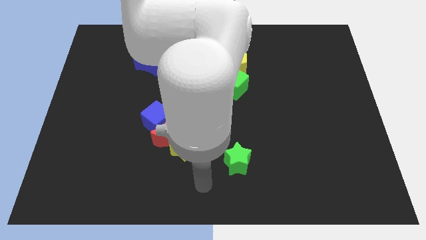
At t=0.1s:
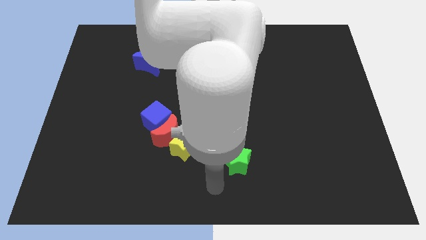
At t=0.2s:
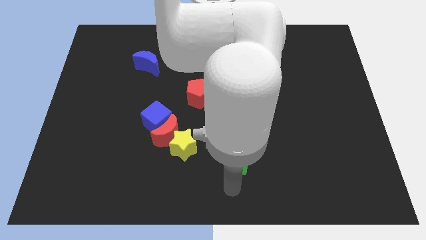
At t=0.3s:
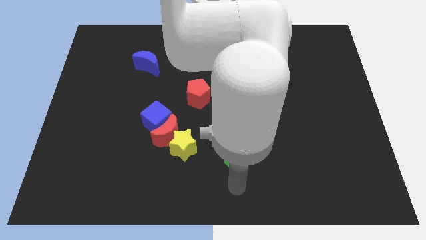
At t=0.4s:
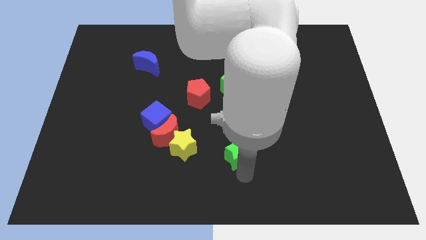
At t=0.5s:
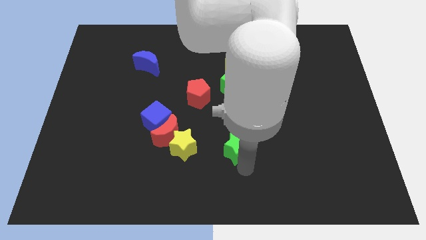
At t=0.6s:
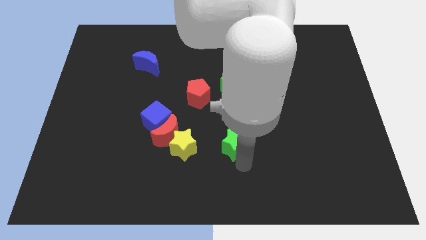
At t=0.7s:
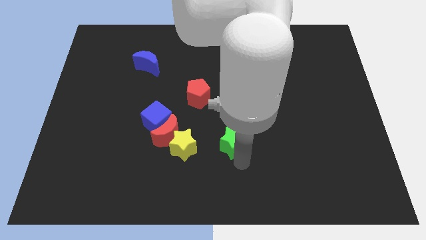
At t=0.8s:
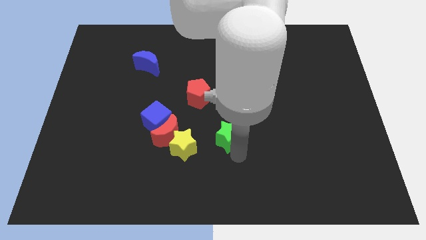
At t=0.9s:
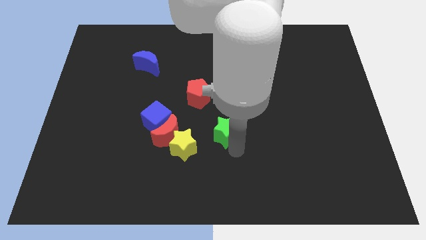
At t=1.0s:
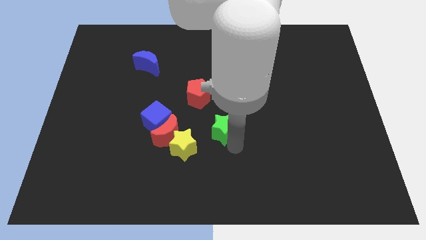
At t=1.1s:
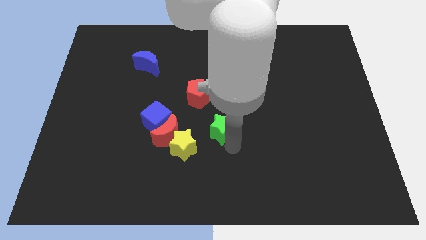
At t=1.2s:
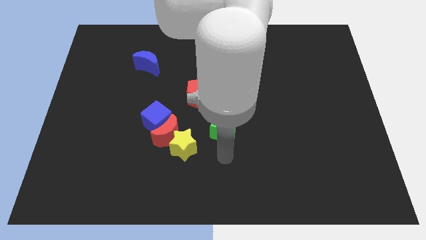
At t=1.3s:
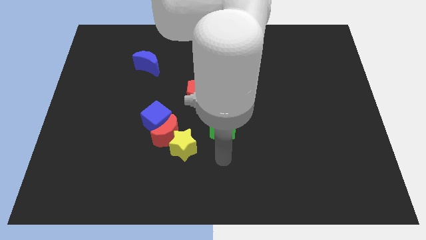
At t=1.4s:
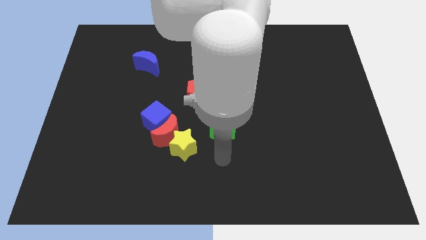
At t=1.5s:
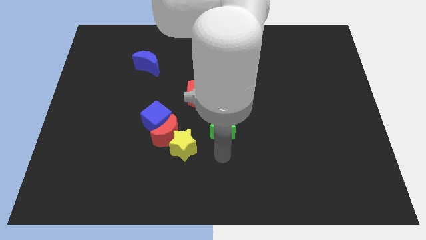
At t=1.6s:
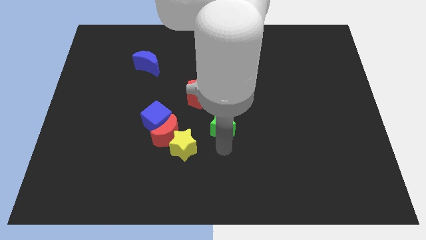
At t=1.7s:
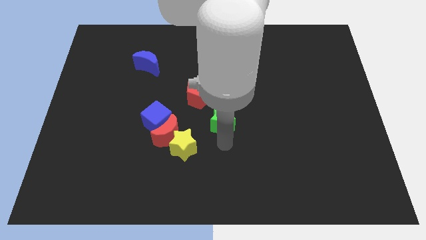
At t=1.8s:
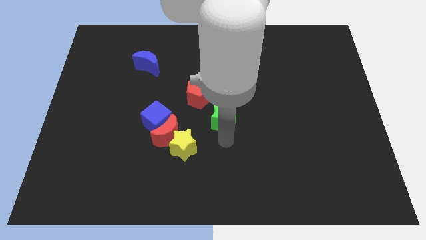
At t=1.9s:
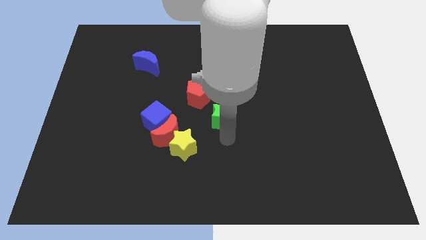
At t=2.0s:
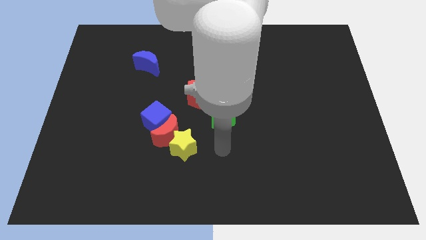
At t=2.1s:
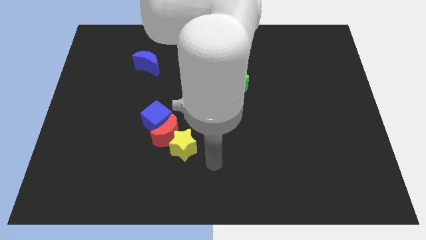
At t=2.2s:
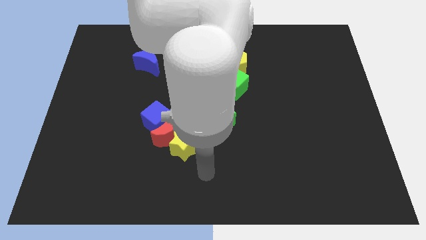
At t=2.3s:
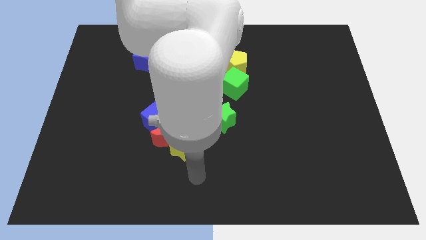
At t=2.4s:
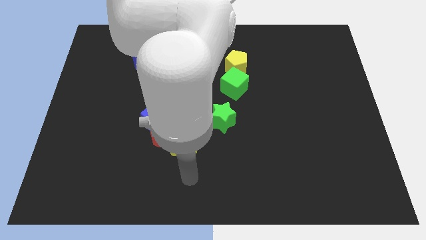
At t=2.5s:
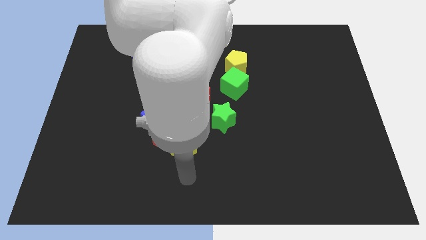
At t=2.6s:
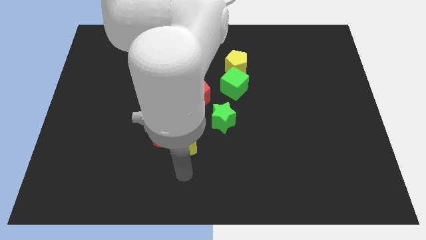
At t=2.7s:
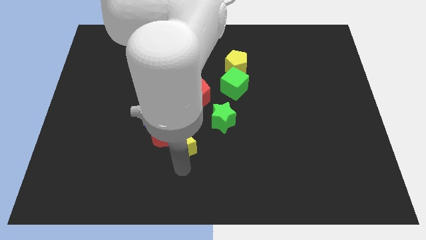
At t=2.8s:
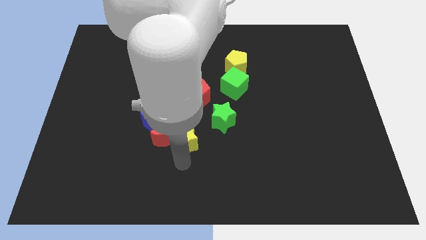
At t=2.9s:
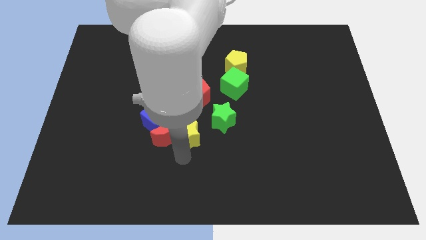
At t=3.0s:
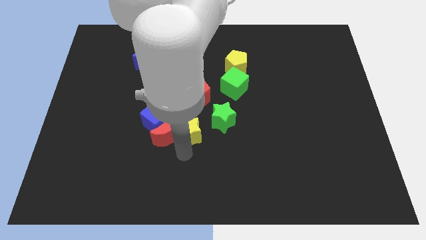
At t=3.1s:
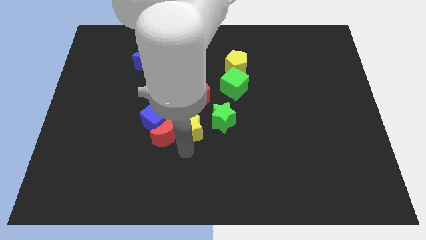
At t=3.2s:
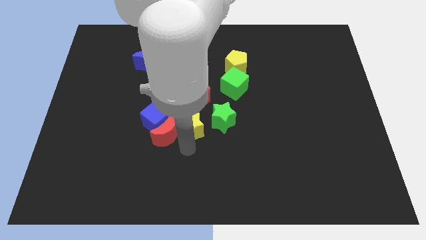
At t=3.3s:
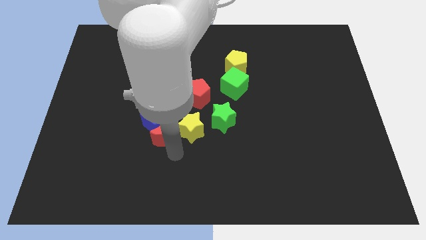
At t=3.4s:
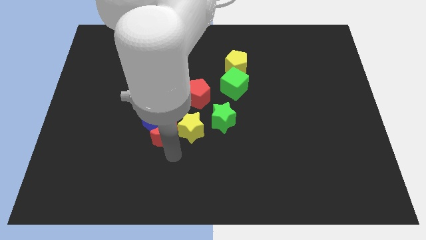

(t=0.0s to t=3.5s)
push both the green star and yellow star towards the center of the board

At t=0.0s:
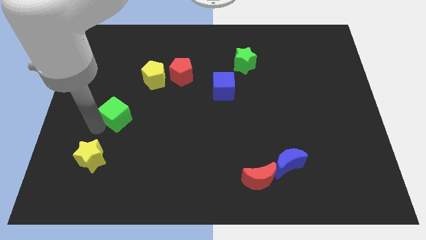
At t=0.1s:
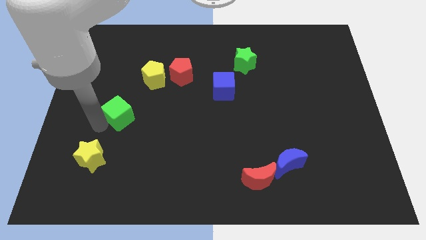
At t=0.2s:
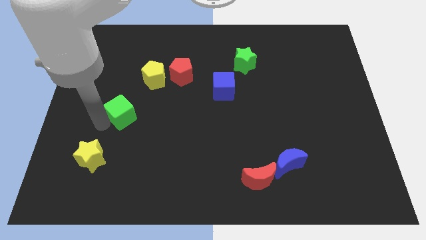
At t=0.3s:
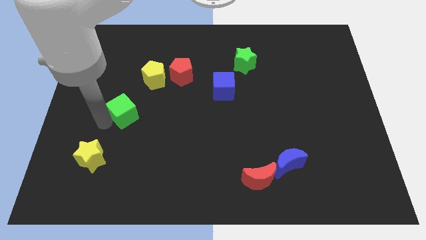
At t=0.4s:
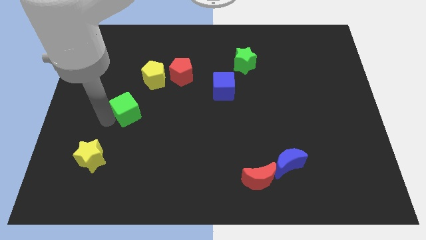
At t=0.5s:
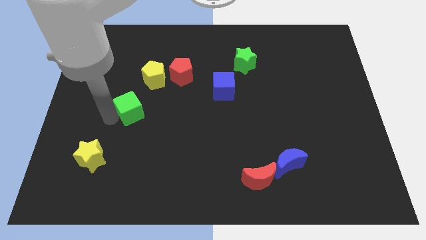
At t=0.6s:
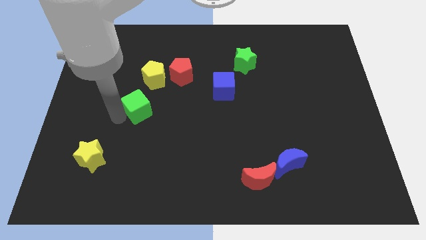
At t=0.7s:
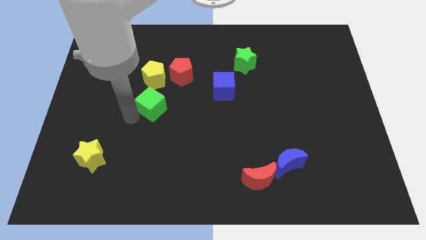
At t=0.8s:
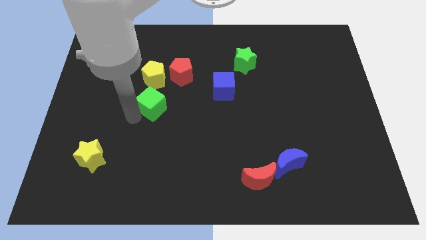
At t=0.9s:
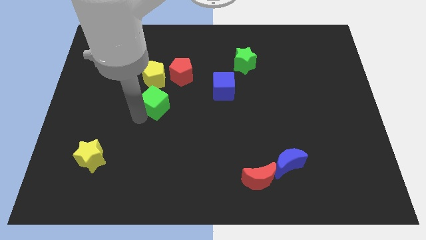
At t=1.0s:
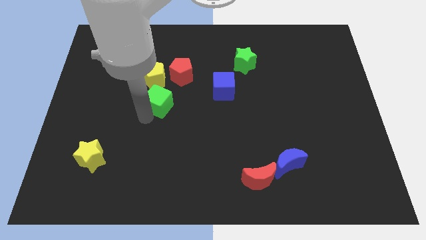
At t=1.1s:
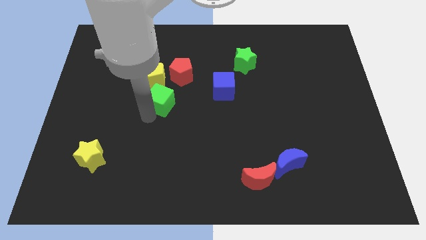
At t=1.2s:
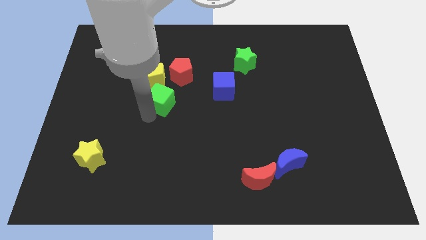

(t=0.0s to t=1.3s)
place the green cube below the yellow pentagon

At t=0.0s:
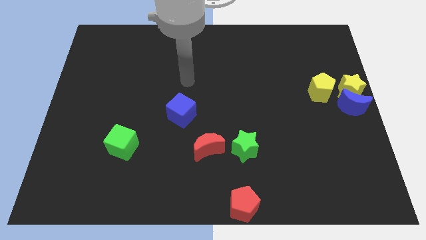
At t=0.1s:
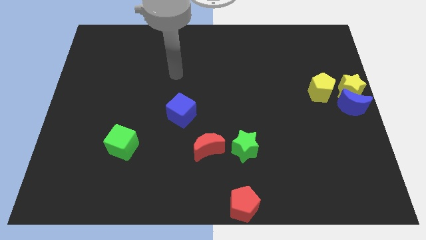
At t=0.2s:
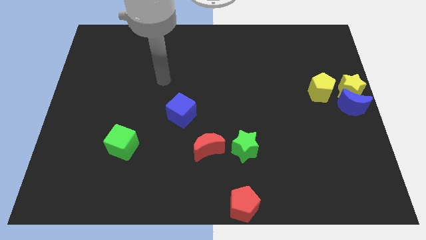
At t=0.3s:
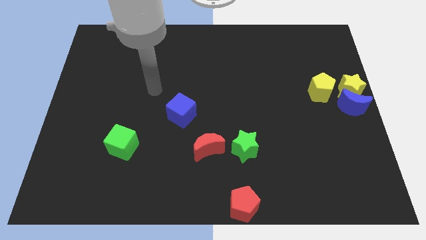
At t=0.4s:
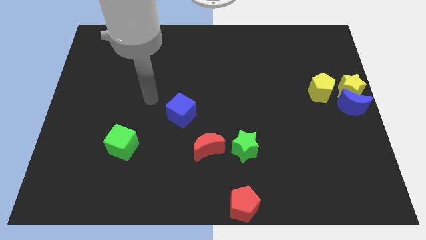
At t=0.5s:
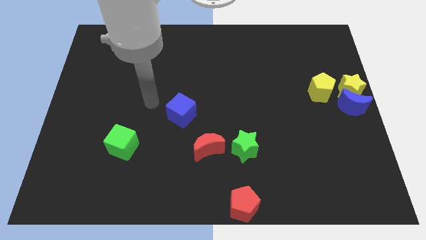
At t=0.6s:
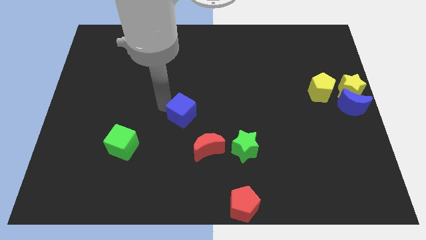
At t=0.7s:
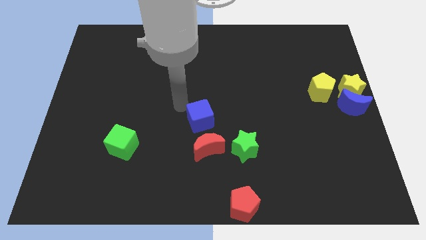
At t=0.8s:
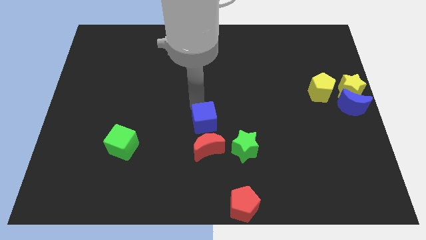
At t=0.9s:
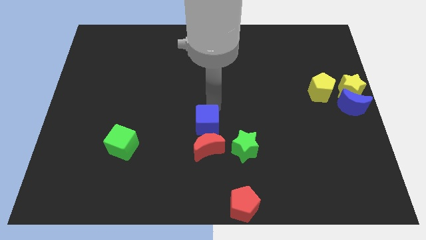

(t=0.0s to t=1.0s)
move the blue cube to the top of the red crescent

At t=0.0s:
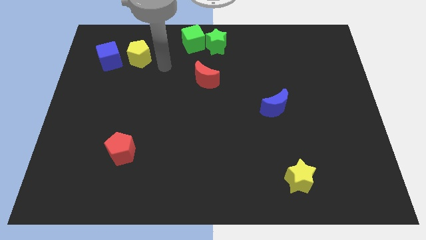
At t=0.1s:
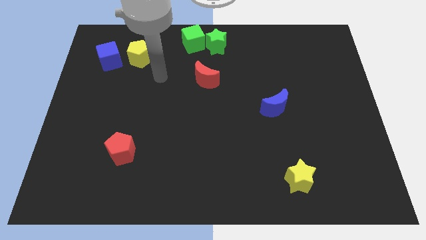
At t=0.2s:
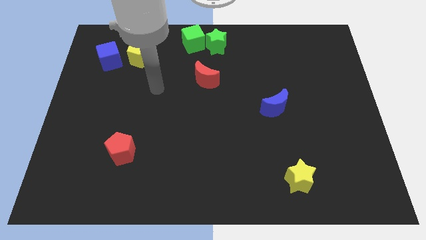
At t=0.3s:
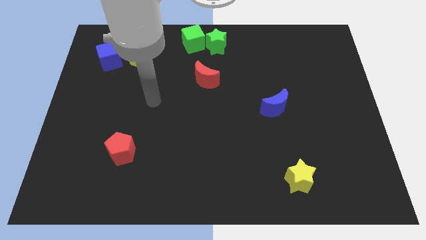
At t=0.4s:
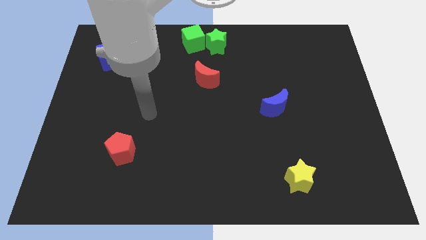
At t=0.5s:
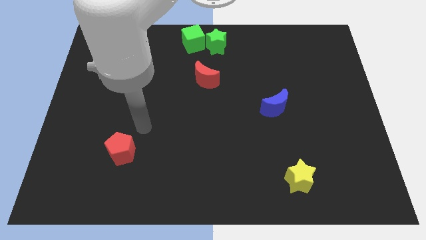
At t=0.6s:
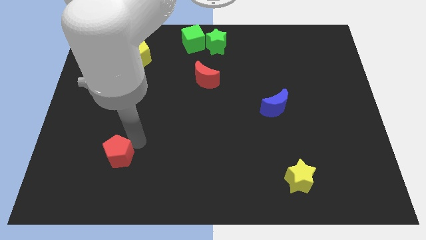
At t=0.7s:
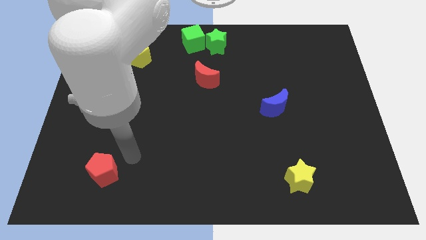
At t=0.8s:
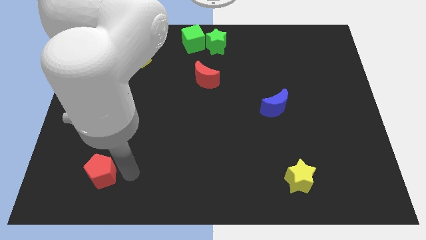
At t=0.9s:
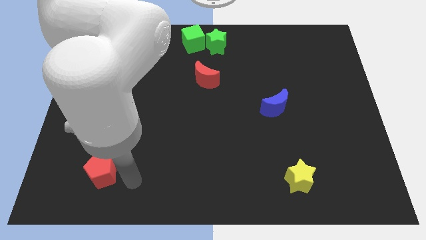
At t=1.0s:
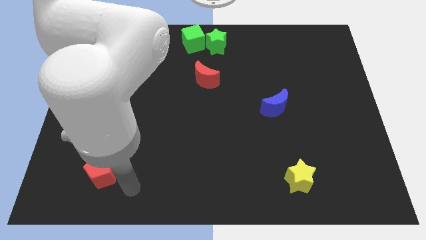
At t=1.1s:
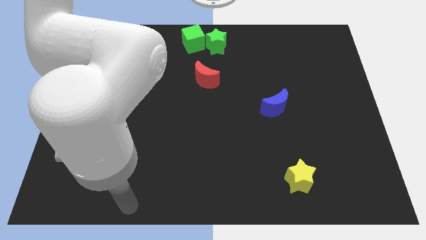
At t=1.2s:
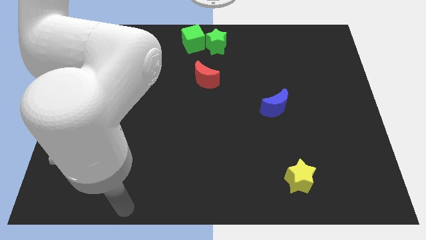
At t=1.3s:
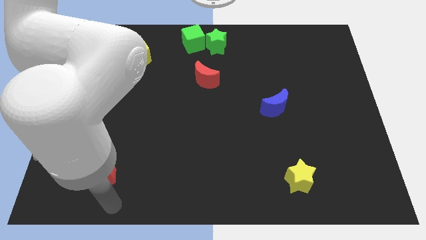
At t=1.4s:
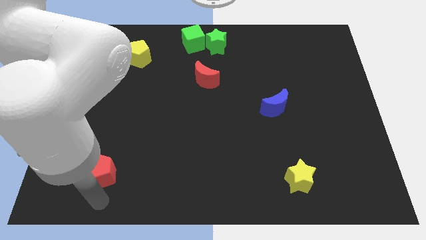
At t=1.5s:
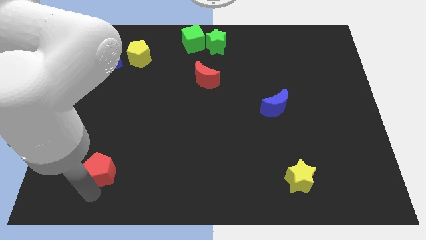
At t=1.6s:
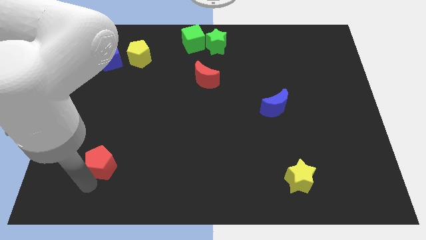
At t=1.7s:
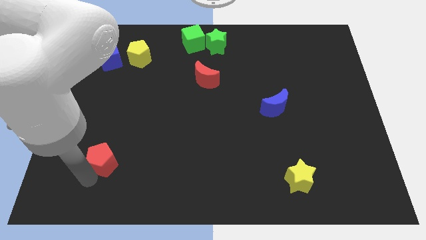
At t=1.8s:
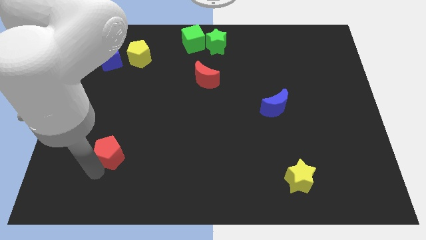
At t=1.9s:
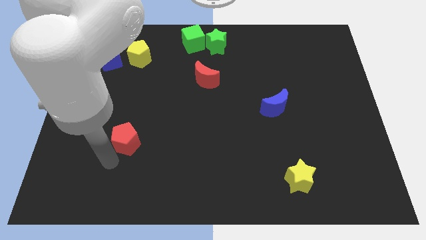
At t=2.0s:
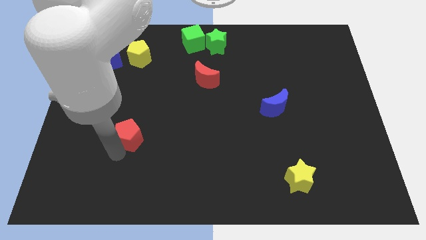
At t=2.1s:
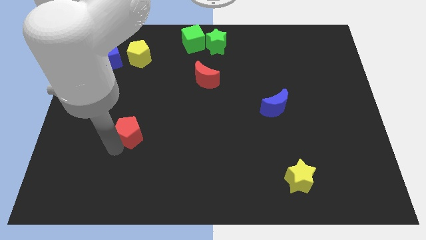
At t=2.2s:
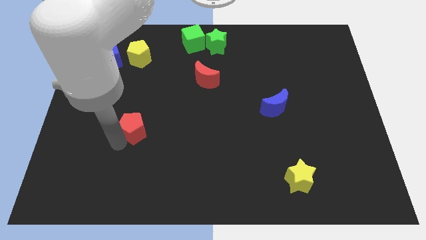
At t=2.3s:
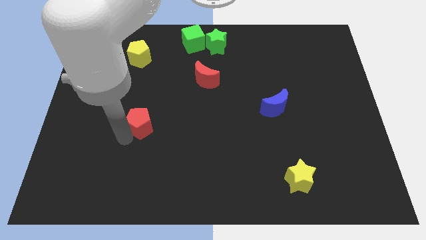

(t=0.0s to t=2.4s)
move the red pentagon slightly upwards

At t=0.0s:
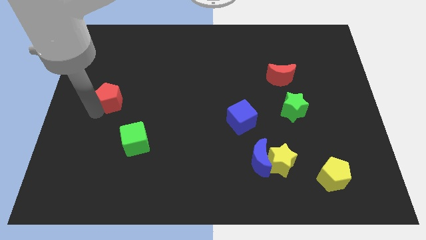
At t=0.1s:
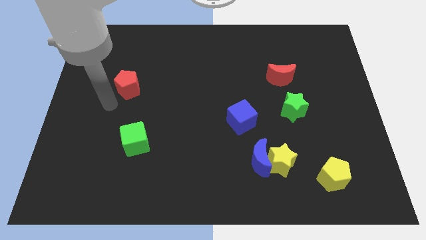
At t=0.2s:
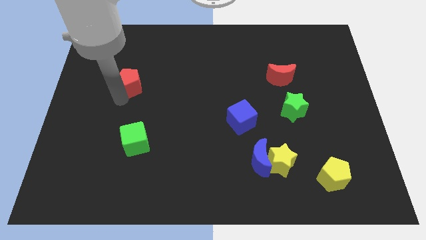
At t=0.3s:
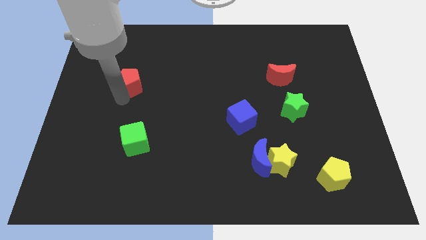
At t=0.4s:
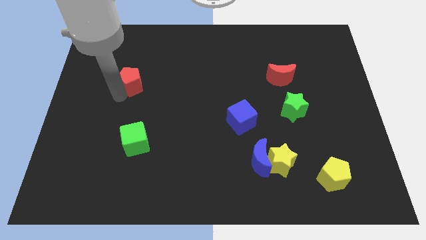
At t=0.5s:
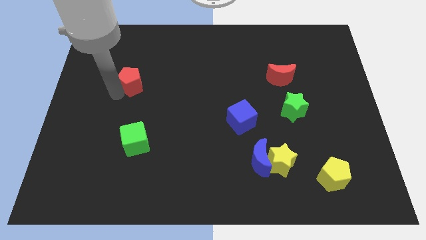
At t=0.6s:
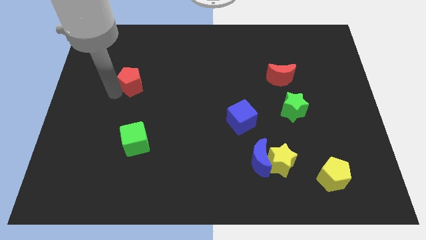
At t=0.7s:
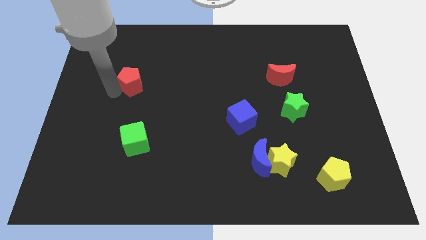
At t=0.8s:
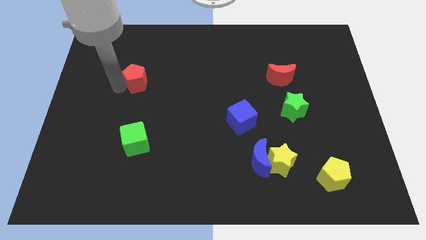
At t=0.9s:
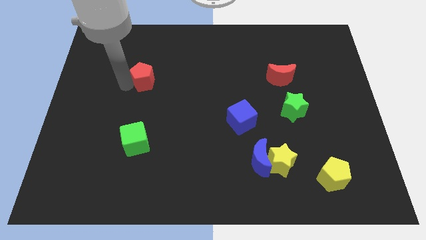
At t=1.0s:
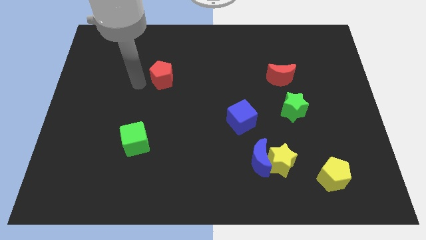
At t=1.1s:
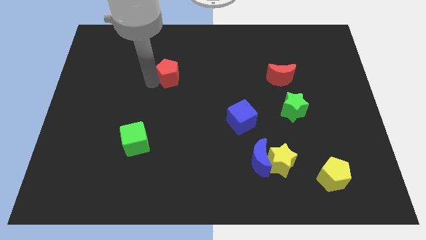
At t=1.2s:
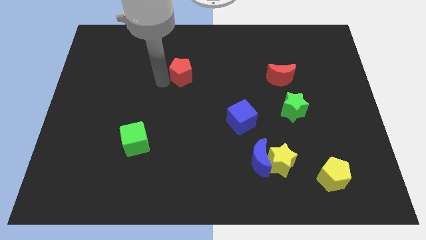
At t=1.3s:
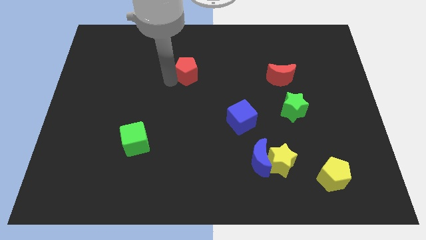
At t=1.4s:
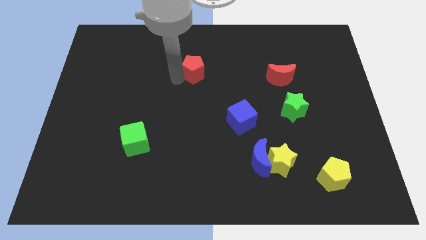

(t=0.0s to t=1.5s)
move the red pentagon to the left of the red moon
